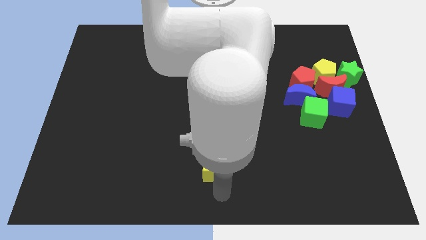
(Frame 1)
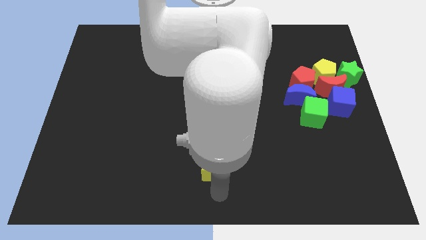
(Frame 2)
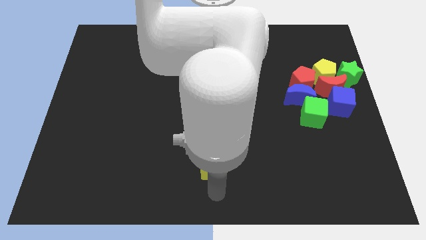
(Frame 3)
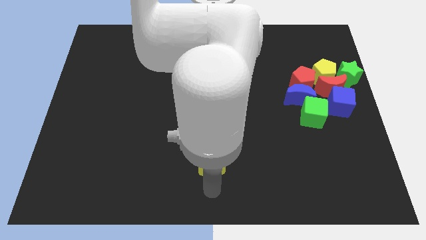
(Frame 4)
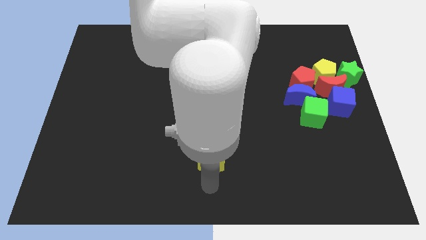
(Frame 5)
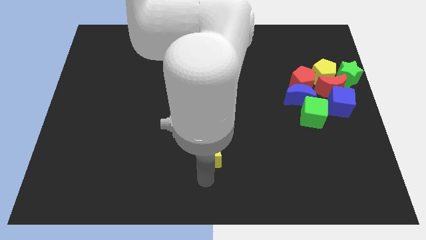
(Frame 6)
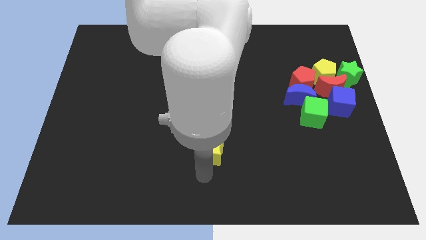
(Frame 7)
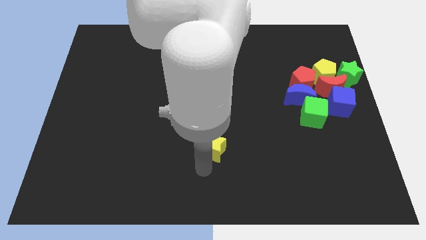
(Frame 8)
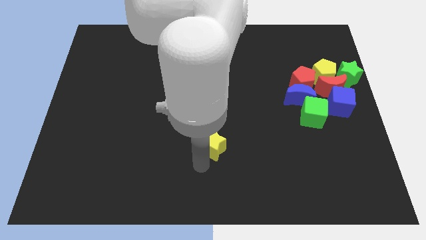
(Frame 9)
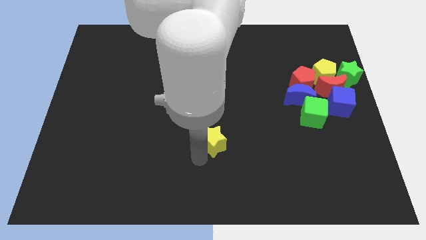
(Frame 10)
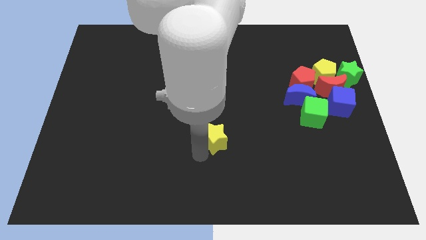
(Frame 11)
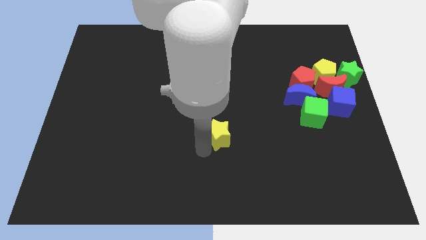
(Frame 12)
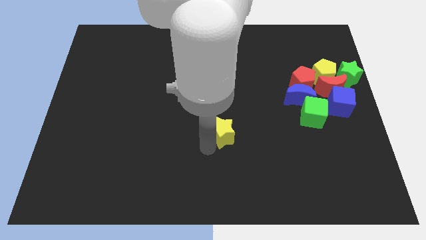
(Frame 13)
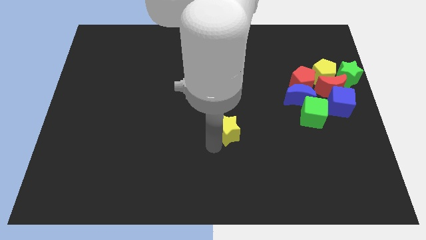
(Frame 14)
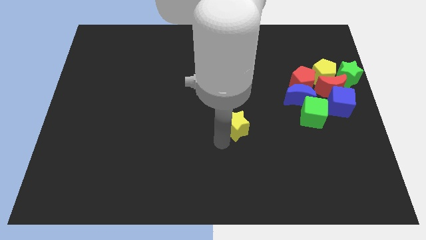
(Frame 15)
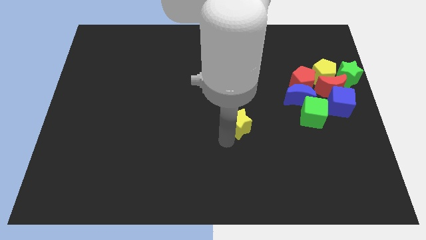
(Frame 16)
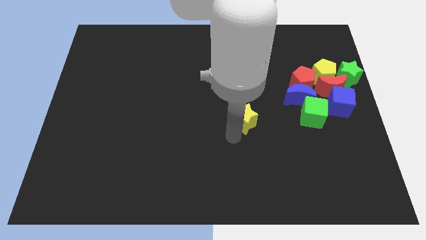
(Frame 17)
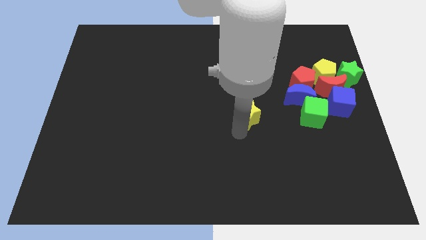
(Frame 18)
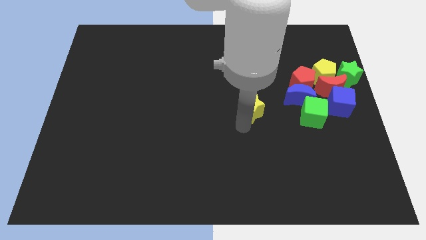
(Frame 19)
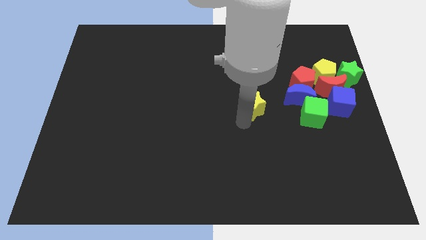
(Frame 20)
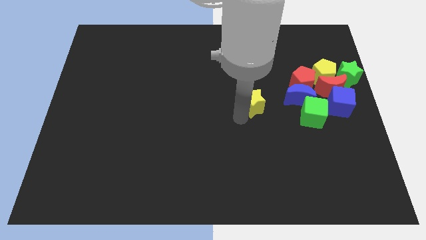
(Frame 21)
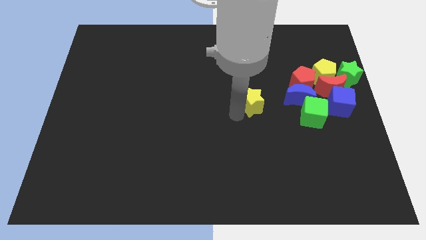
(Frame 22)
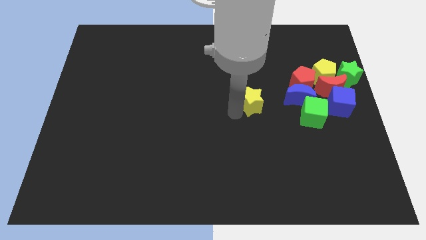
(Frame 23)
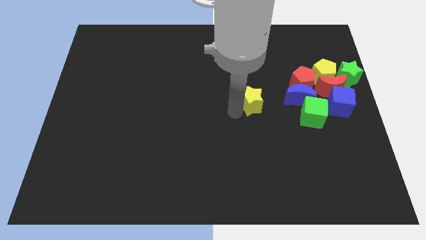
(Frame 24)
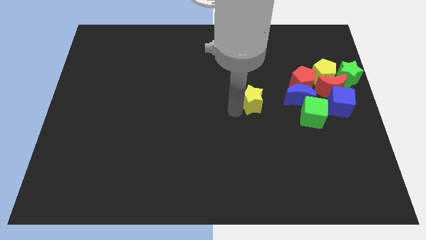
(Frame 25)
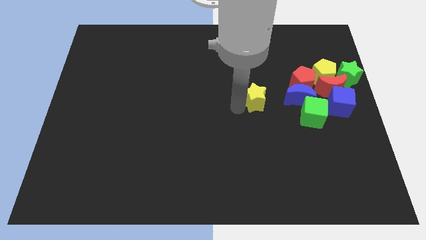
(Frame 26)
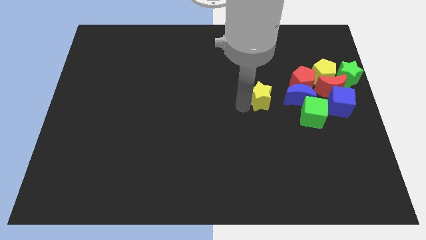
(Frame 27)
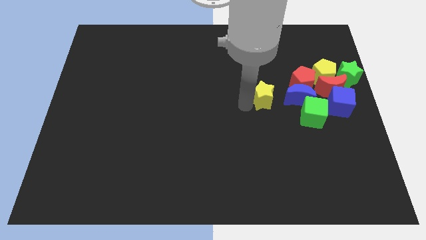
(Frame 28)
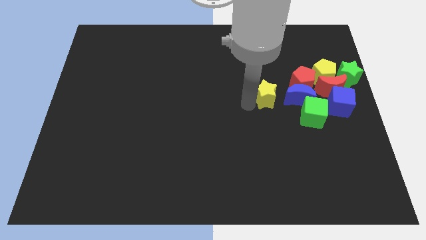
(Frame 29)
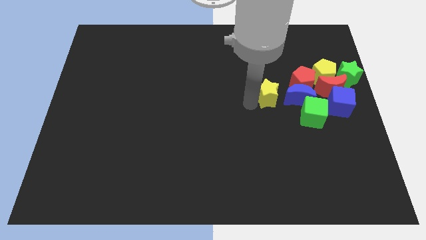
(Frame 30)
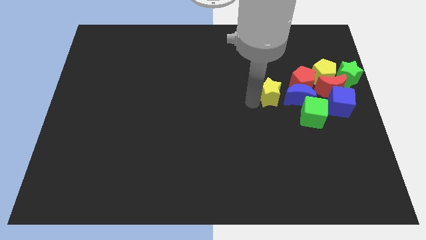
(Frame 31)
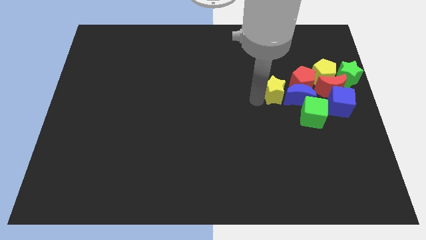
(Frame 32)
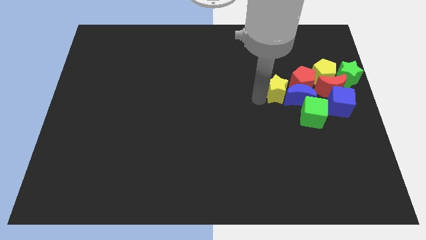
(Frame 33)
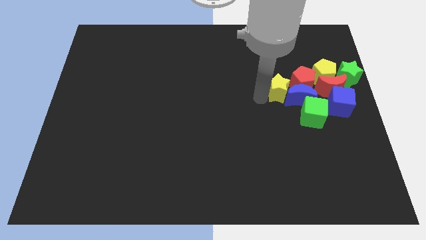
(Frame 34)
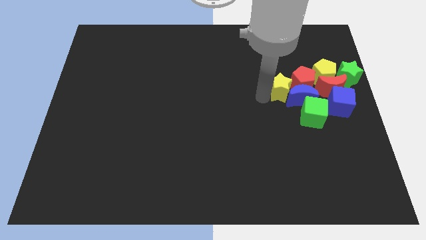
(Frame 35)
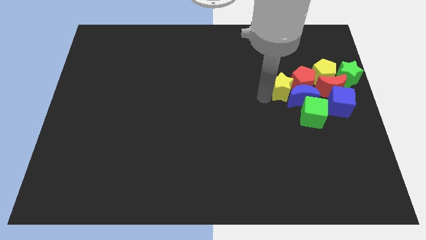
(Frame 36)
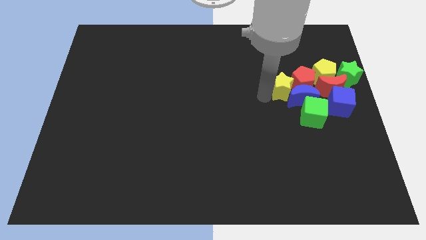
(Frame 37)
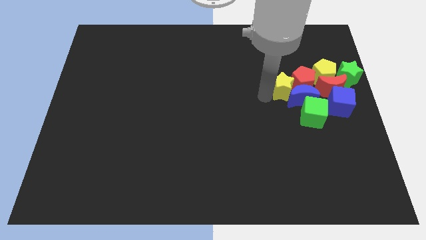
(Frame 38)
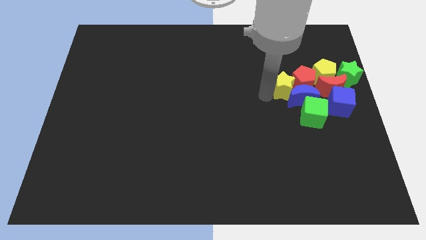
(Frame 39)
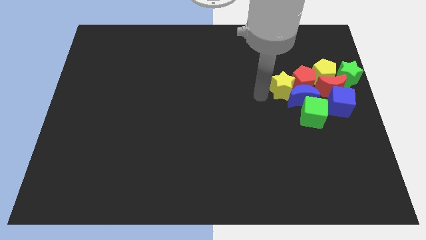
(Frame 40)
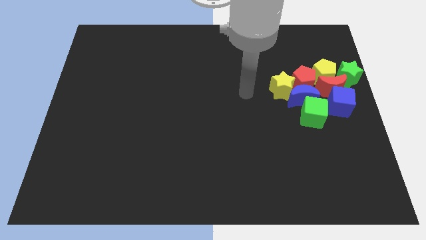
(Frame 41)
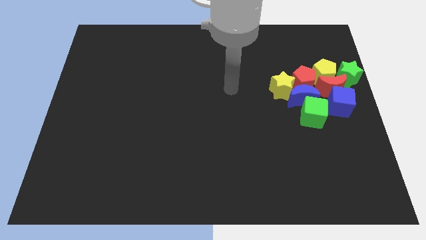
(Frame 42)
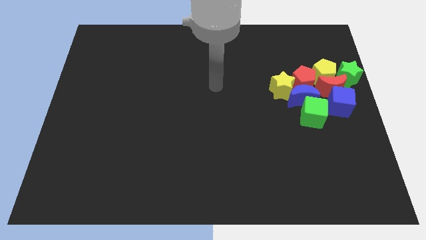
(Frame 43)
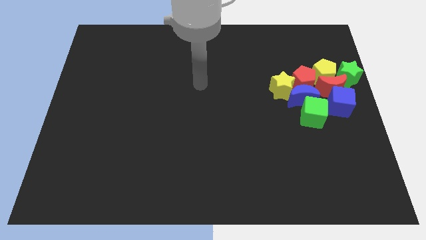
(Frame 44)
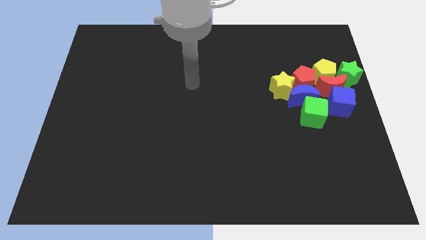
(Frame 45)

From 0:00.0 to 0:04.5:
push the yellow star into the group of blocks

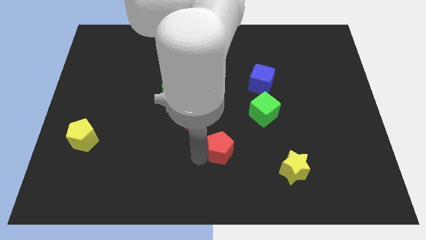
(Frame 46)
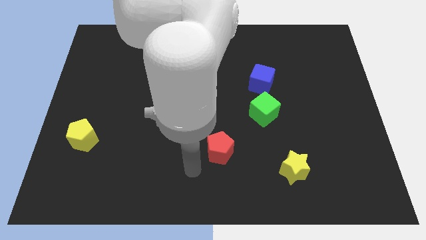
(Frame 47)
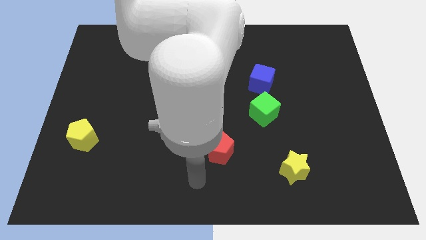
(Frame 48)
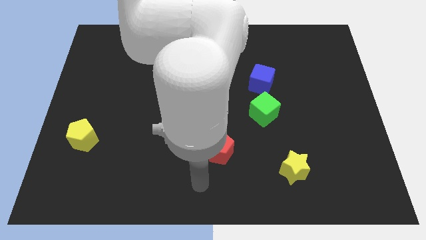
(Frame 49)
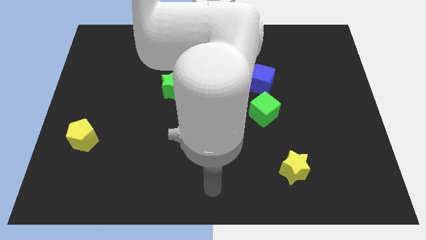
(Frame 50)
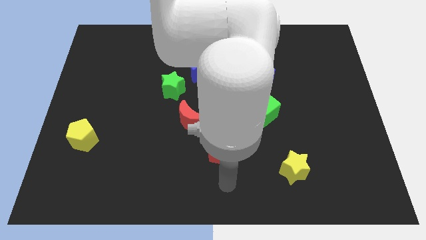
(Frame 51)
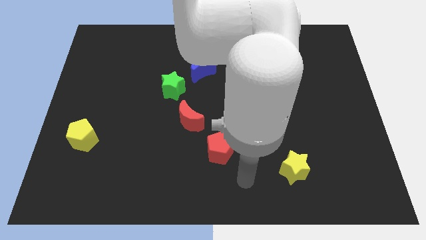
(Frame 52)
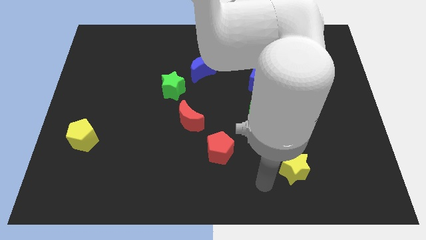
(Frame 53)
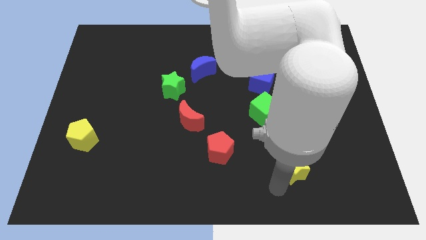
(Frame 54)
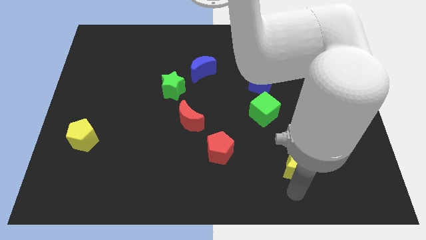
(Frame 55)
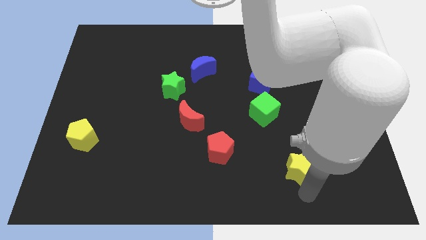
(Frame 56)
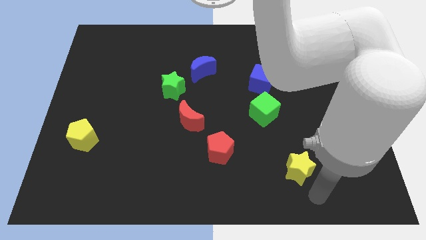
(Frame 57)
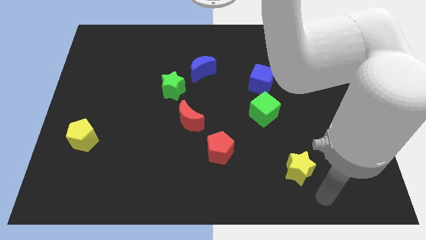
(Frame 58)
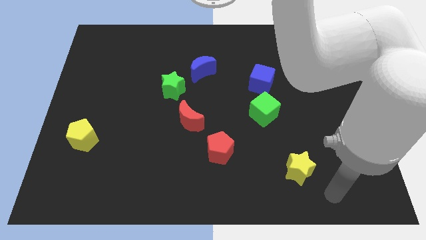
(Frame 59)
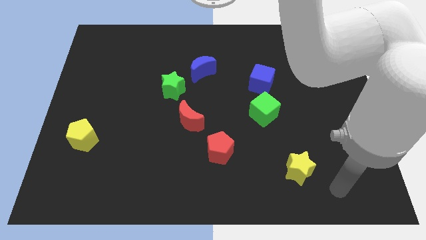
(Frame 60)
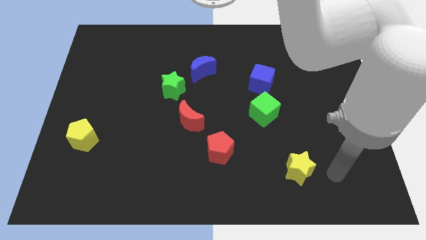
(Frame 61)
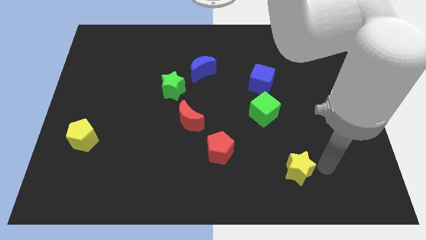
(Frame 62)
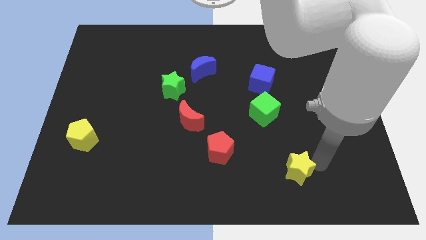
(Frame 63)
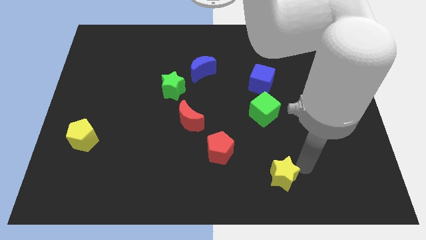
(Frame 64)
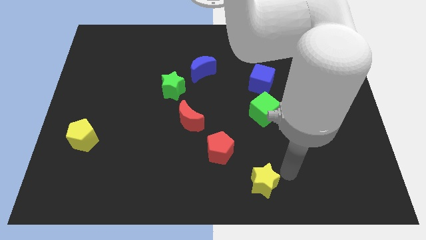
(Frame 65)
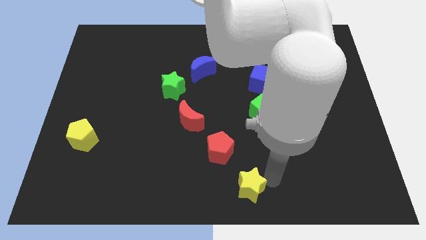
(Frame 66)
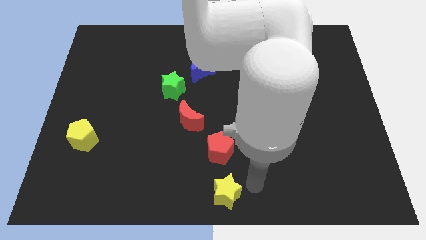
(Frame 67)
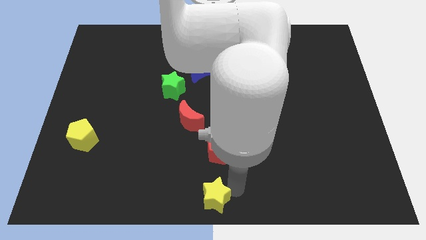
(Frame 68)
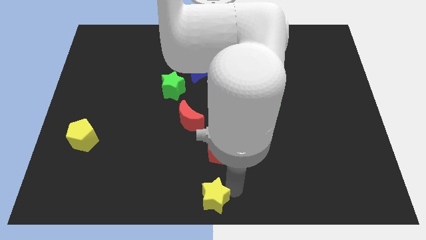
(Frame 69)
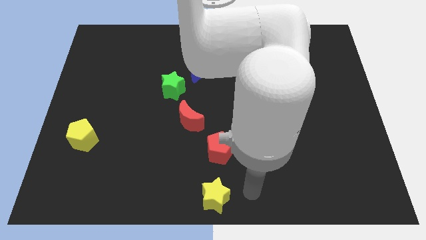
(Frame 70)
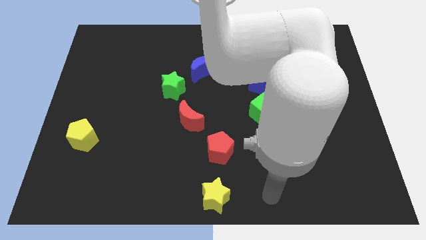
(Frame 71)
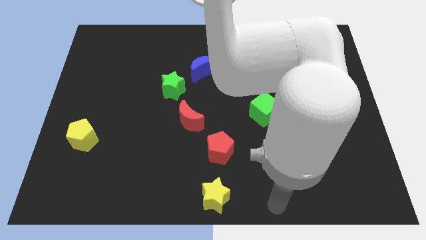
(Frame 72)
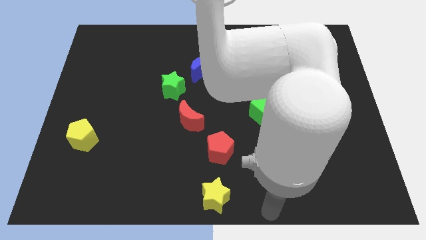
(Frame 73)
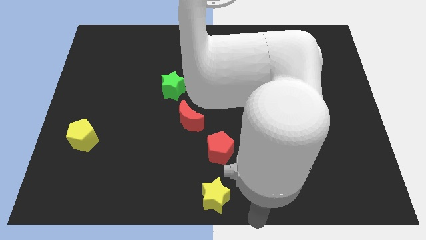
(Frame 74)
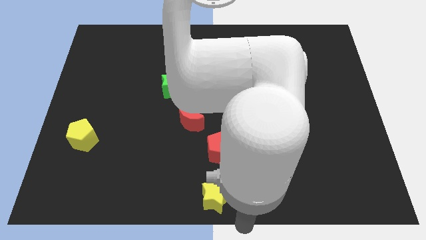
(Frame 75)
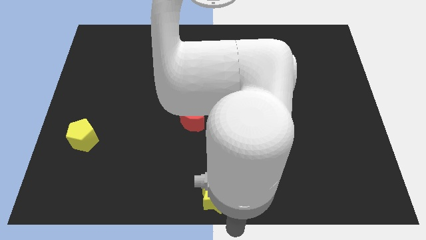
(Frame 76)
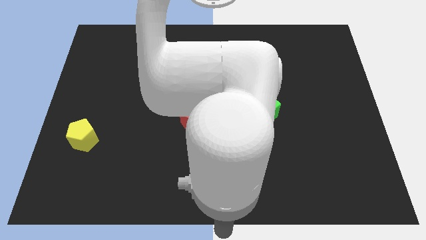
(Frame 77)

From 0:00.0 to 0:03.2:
move the yellow star to the bottom center of the board

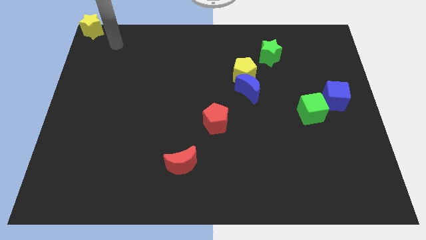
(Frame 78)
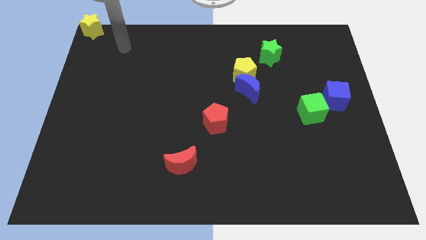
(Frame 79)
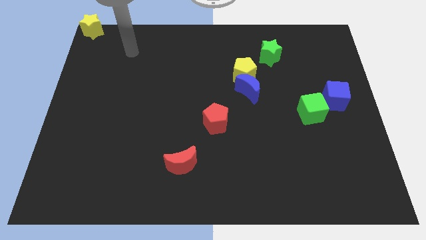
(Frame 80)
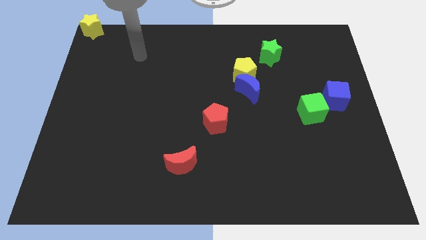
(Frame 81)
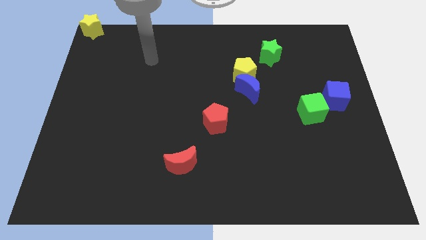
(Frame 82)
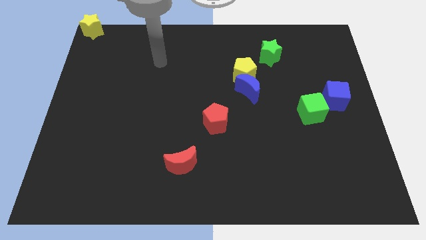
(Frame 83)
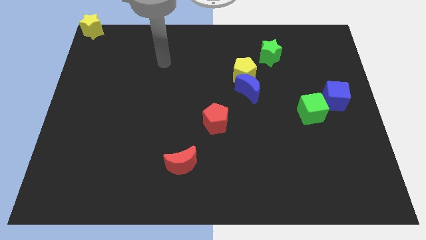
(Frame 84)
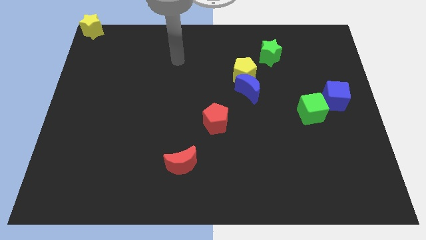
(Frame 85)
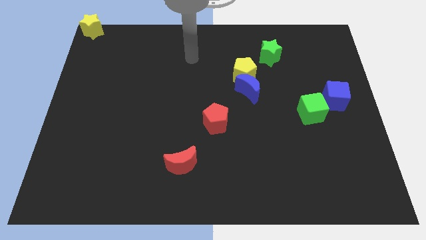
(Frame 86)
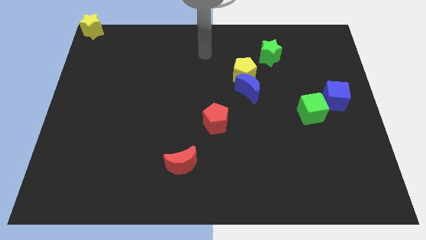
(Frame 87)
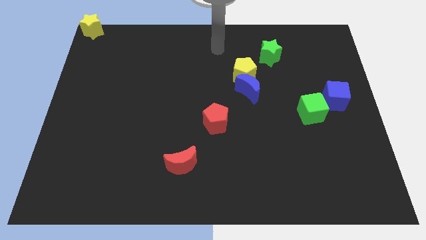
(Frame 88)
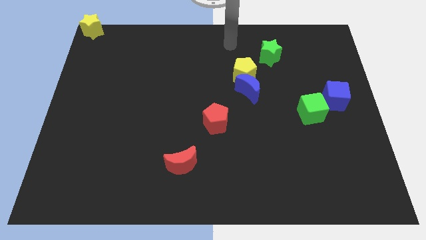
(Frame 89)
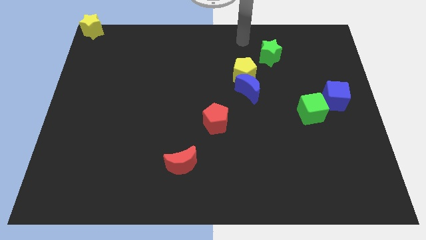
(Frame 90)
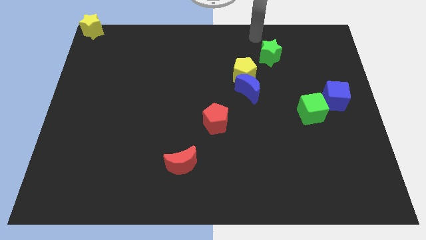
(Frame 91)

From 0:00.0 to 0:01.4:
place your hand above the yellow pentagon
